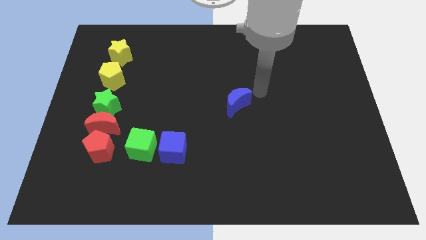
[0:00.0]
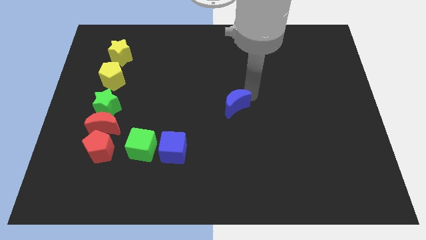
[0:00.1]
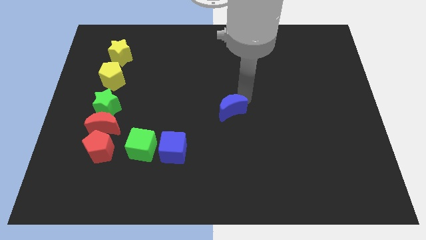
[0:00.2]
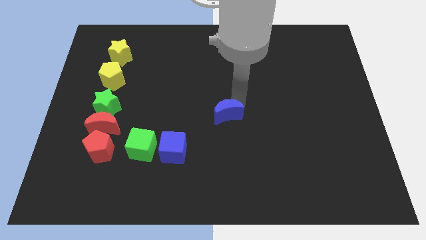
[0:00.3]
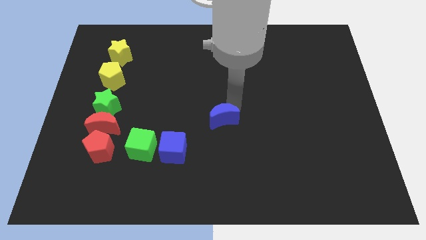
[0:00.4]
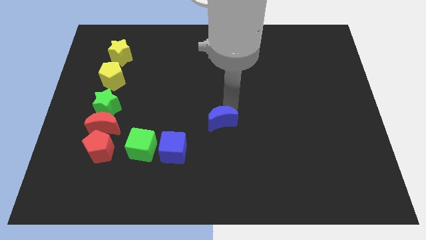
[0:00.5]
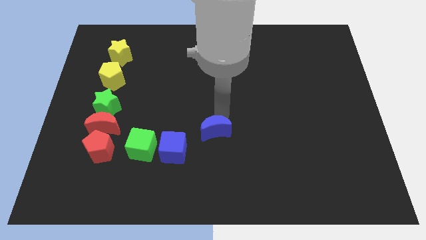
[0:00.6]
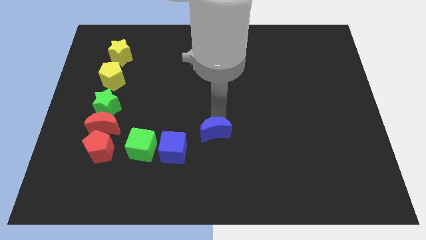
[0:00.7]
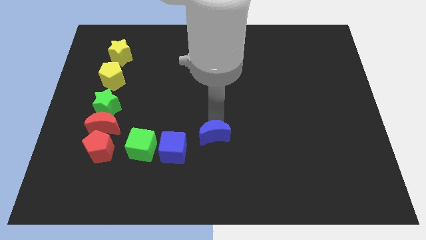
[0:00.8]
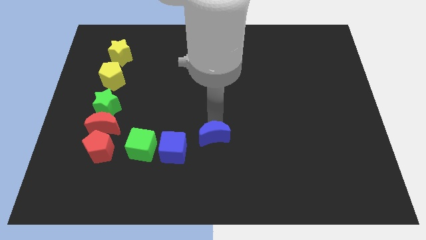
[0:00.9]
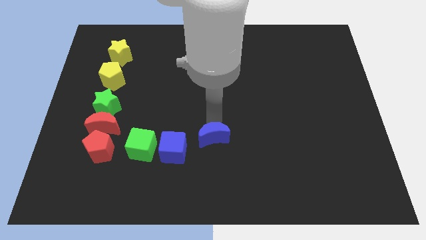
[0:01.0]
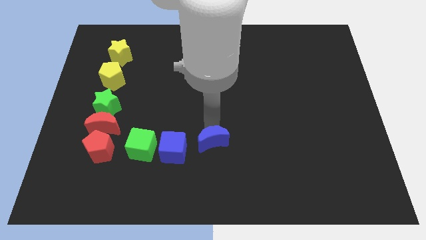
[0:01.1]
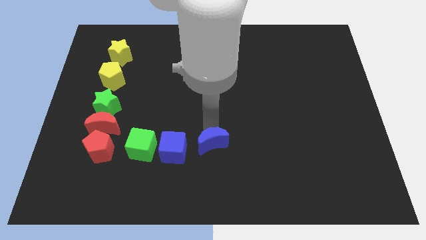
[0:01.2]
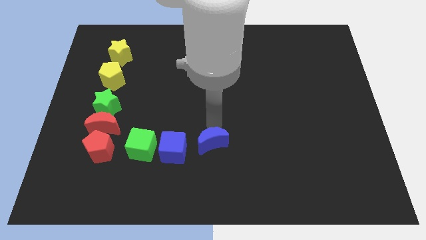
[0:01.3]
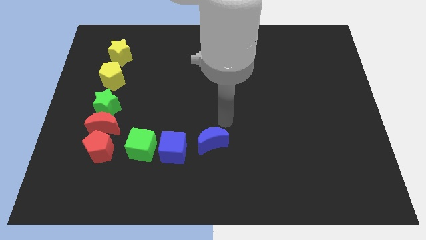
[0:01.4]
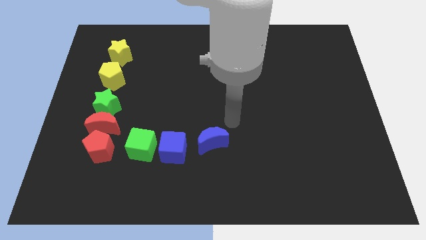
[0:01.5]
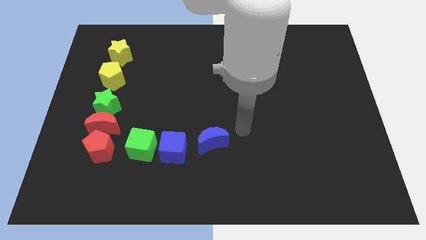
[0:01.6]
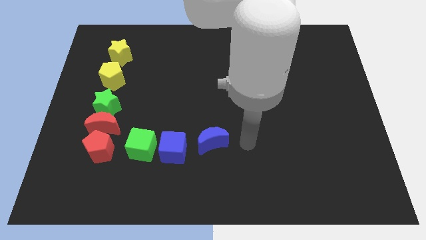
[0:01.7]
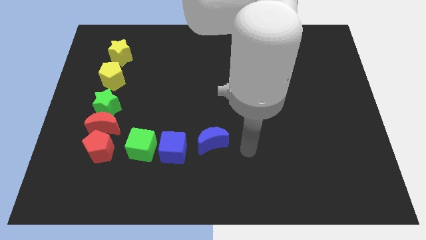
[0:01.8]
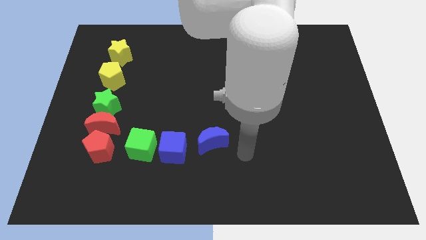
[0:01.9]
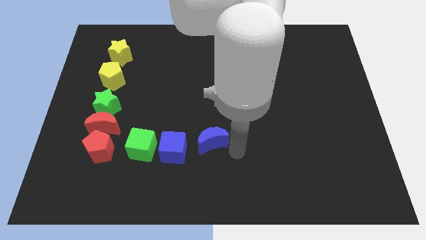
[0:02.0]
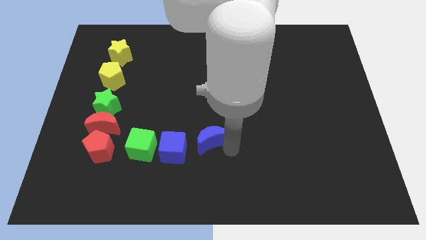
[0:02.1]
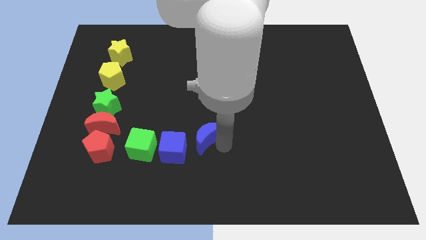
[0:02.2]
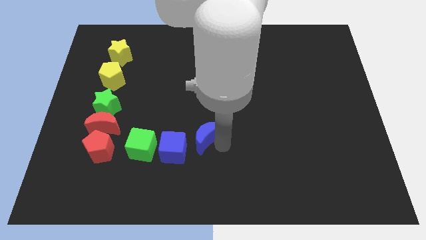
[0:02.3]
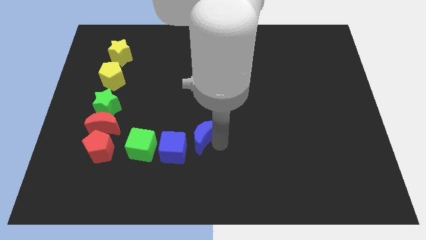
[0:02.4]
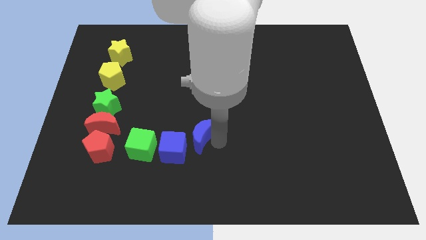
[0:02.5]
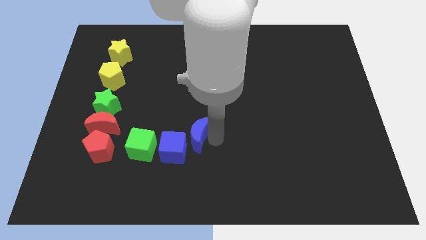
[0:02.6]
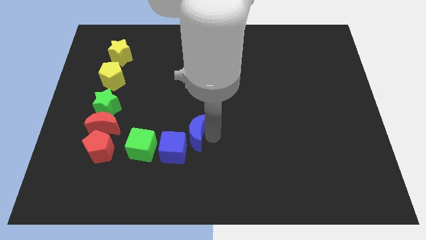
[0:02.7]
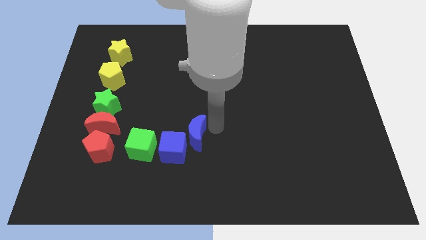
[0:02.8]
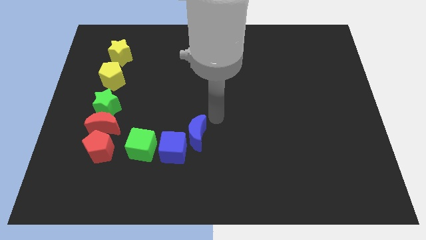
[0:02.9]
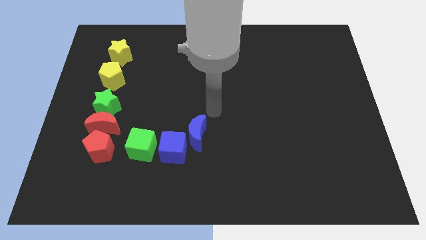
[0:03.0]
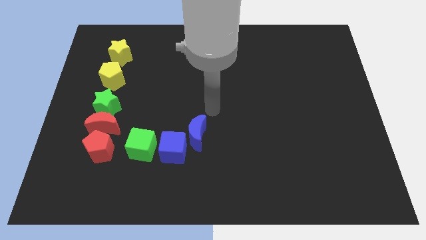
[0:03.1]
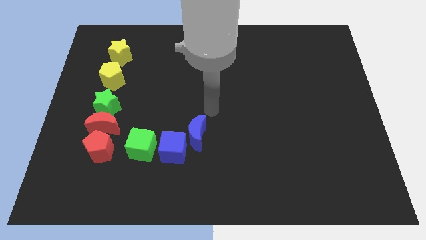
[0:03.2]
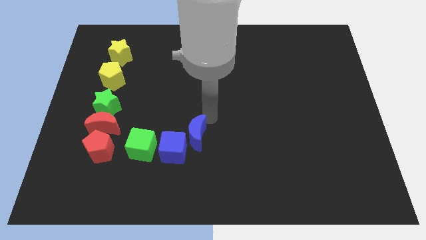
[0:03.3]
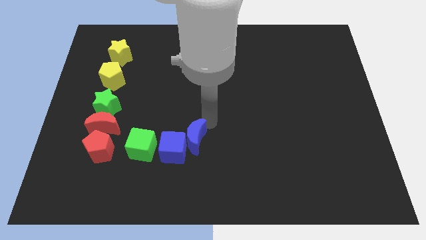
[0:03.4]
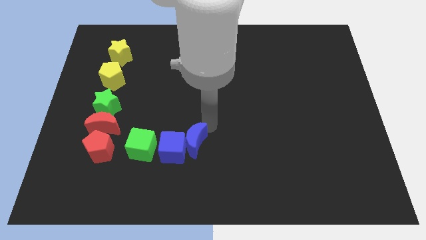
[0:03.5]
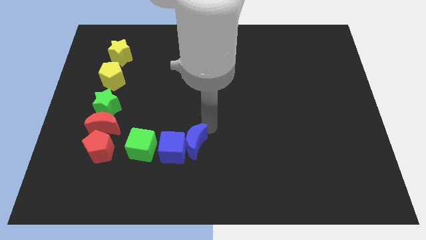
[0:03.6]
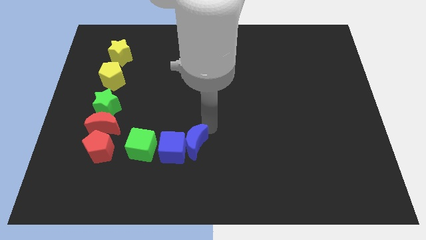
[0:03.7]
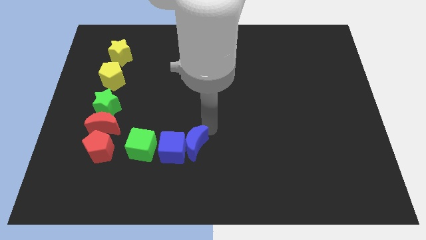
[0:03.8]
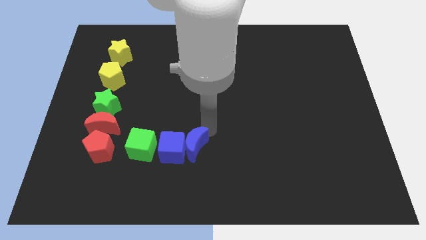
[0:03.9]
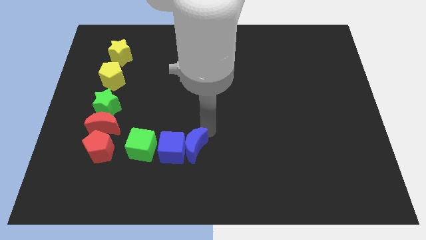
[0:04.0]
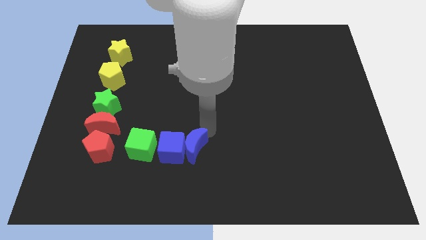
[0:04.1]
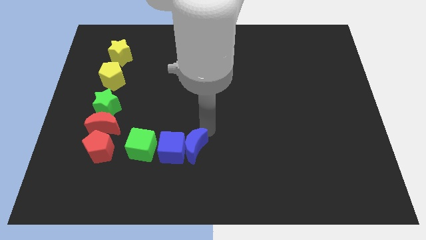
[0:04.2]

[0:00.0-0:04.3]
push the blue moon close to the blue cube

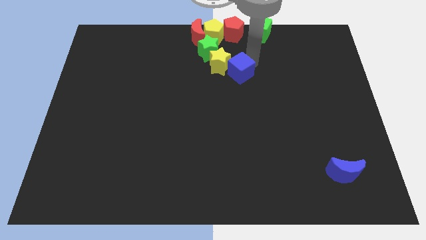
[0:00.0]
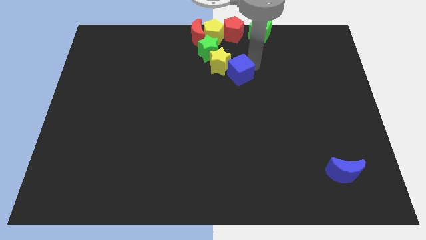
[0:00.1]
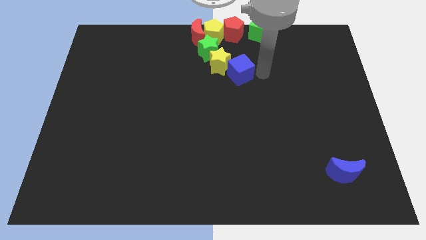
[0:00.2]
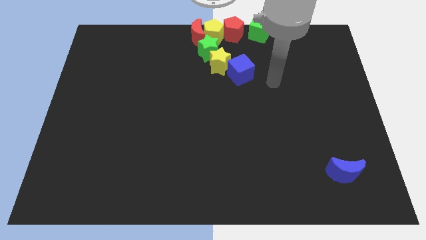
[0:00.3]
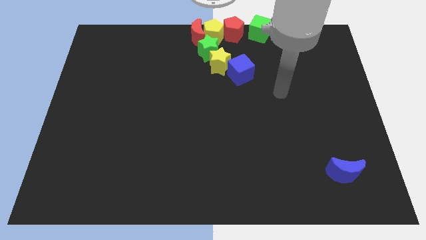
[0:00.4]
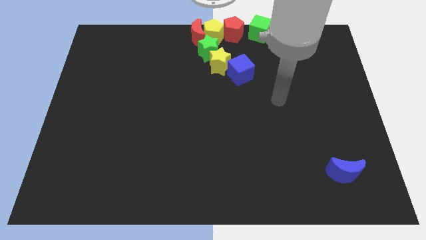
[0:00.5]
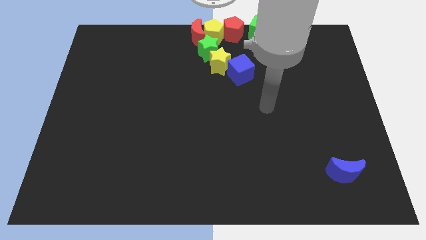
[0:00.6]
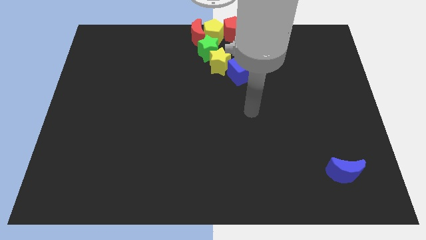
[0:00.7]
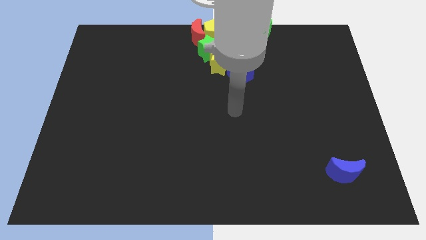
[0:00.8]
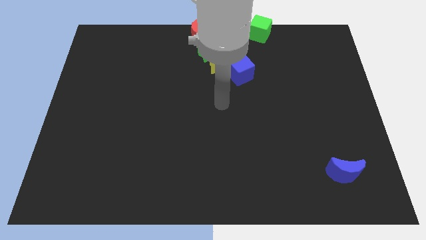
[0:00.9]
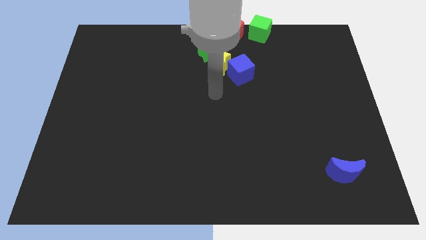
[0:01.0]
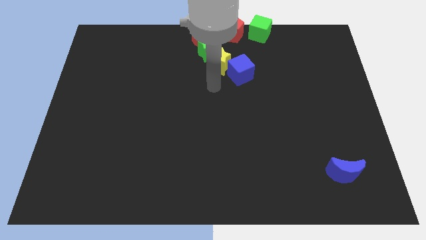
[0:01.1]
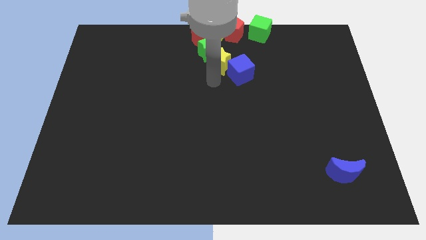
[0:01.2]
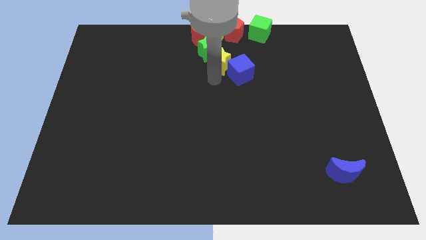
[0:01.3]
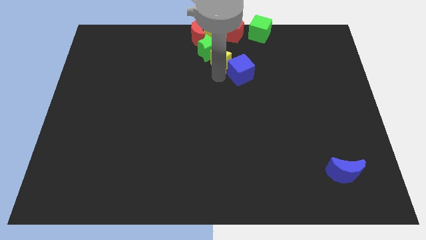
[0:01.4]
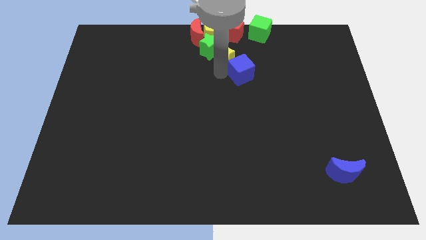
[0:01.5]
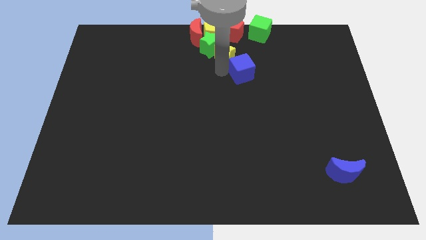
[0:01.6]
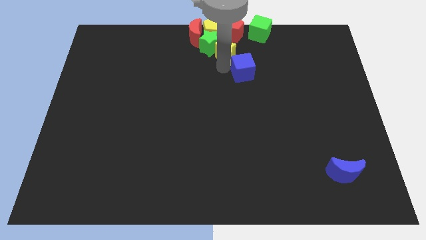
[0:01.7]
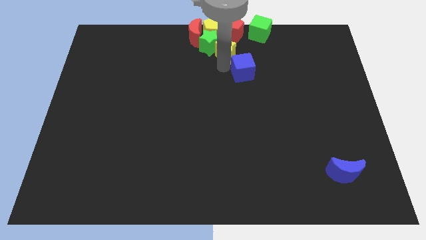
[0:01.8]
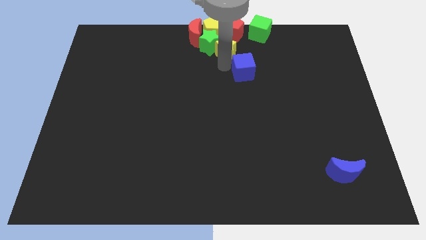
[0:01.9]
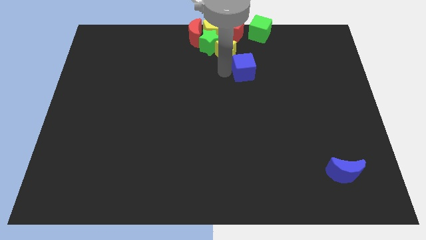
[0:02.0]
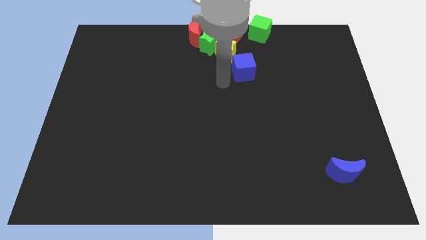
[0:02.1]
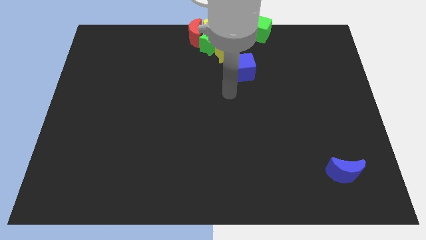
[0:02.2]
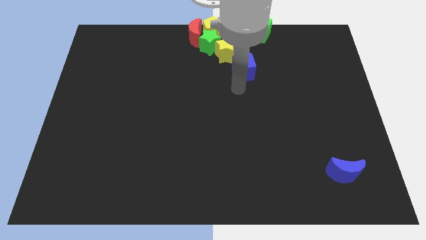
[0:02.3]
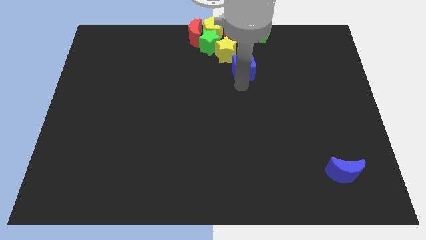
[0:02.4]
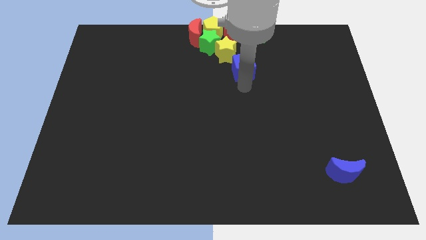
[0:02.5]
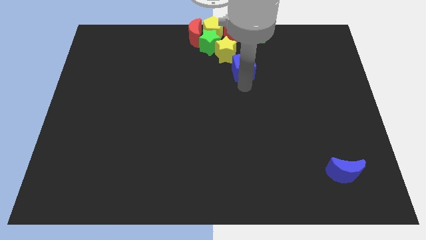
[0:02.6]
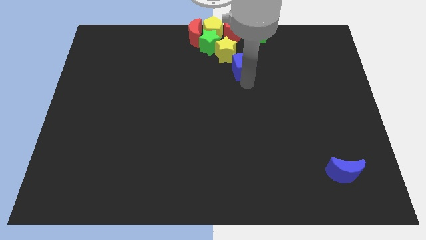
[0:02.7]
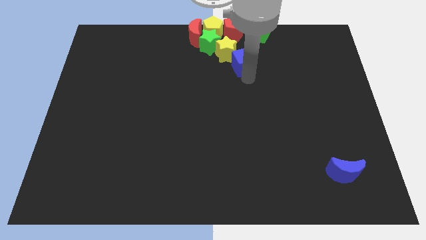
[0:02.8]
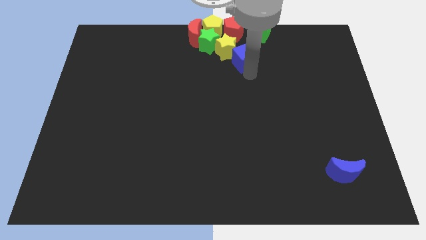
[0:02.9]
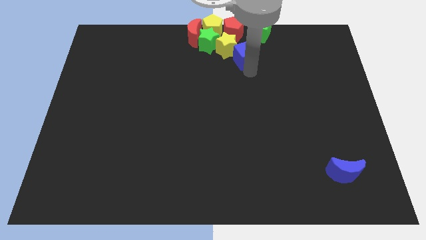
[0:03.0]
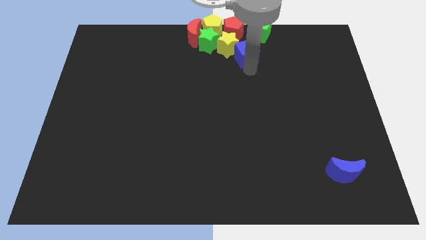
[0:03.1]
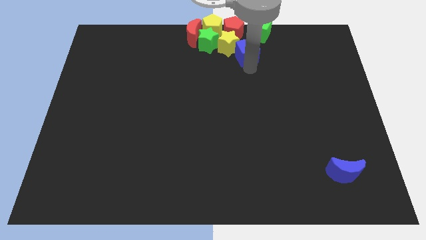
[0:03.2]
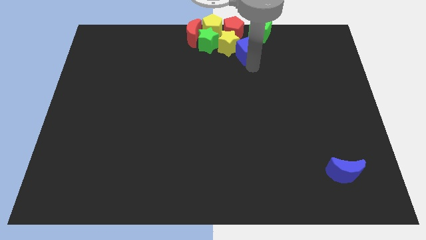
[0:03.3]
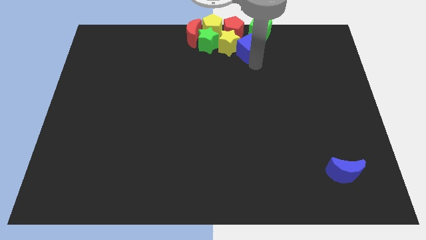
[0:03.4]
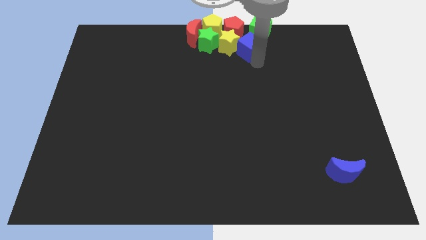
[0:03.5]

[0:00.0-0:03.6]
push blue cube and yellow star into the group of blocks

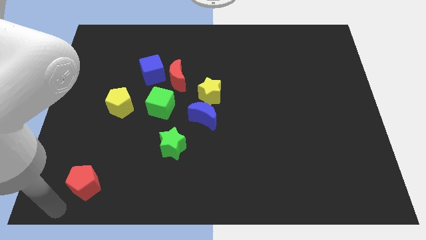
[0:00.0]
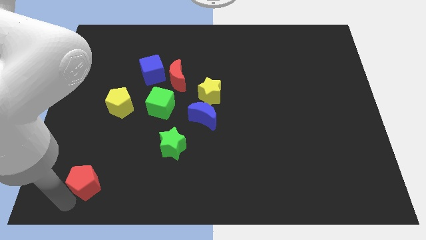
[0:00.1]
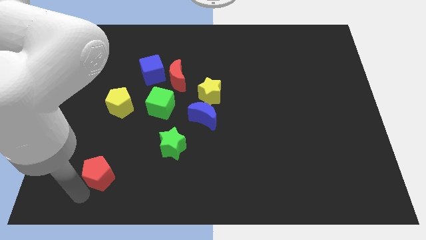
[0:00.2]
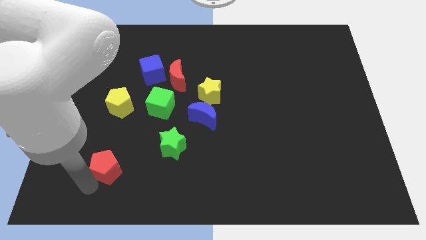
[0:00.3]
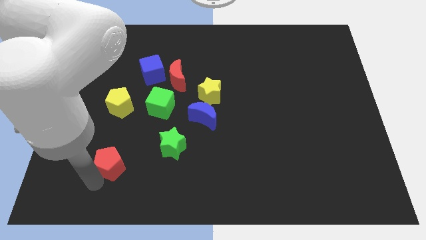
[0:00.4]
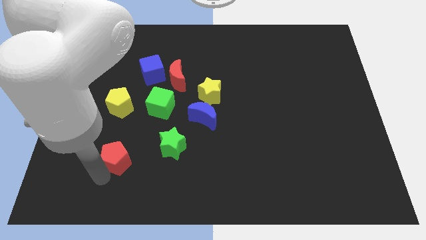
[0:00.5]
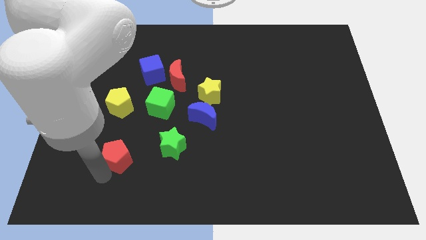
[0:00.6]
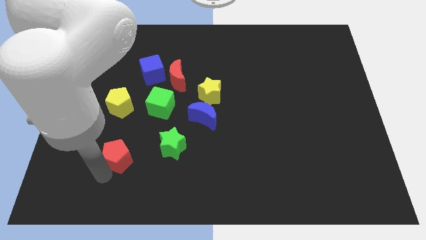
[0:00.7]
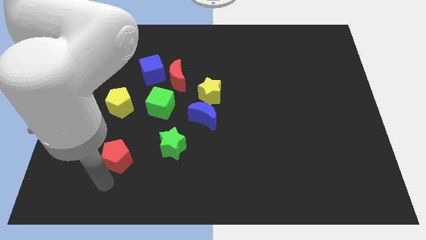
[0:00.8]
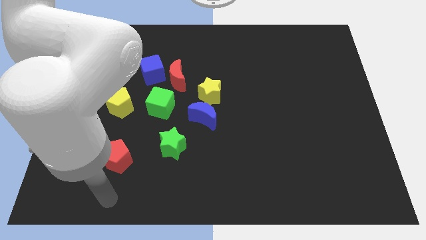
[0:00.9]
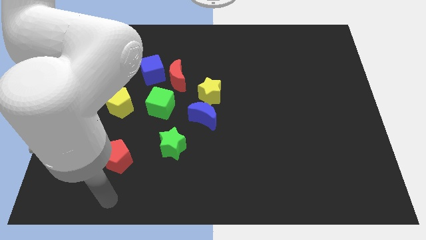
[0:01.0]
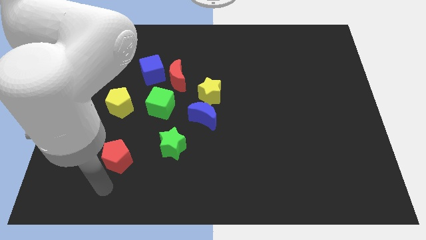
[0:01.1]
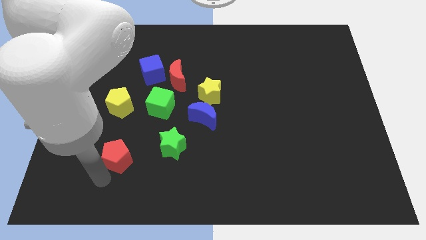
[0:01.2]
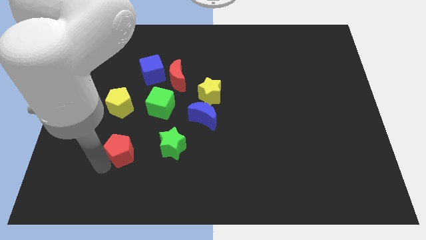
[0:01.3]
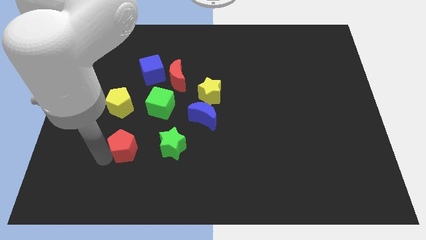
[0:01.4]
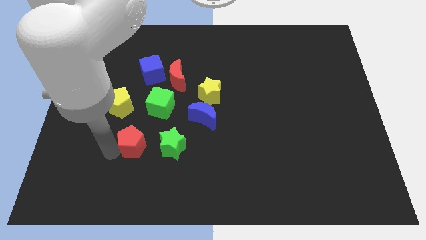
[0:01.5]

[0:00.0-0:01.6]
place the red pentagon to the left of the green star
